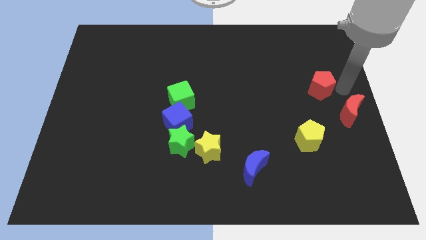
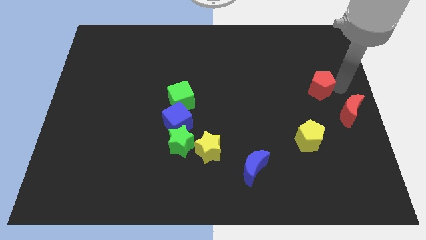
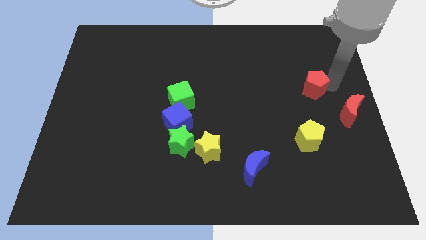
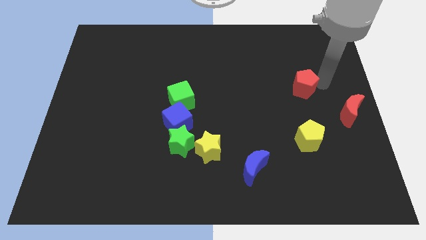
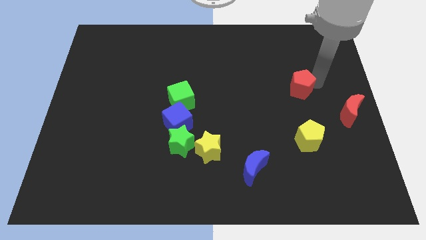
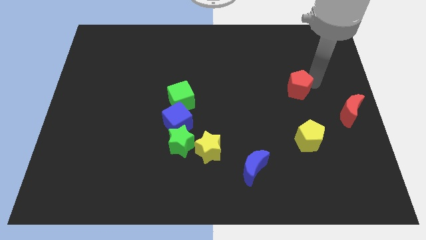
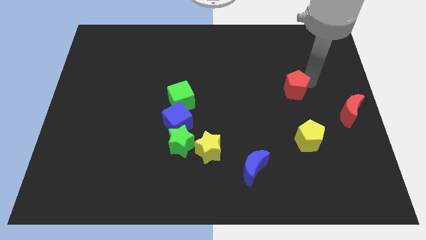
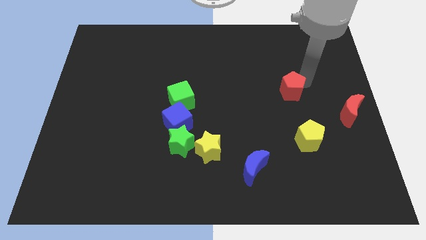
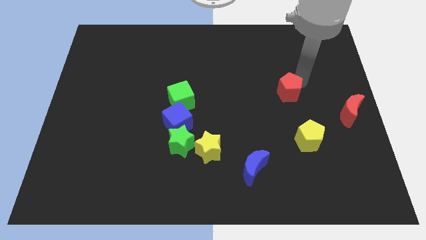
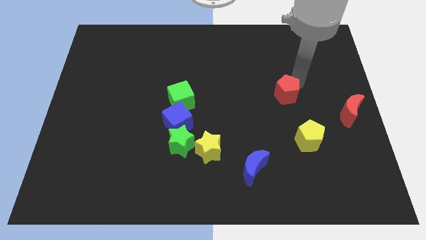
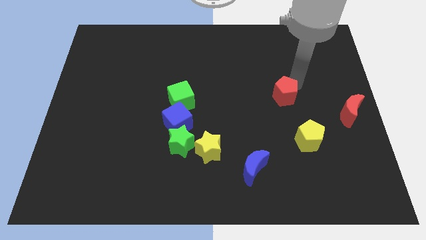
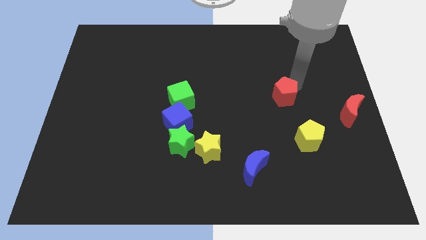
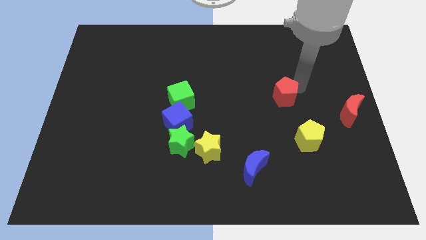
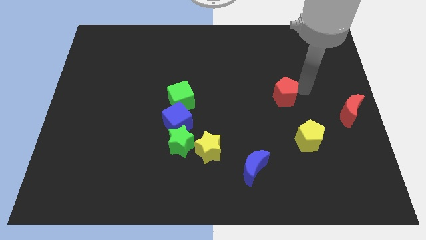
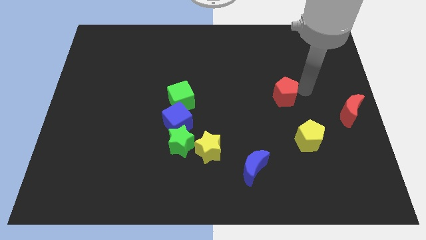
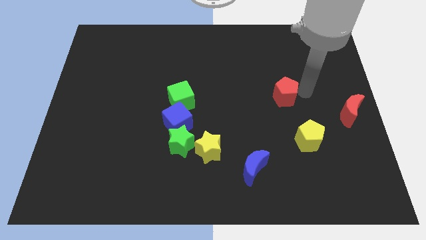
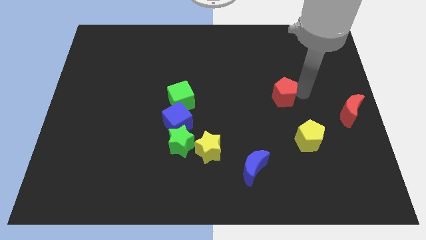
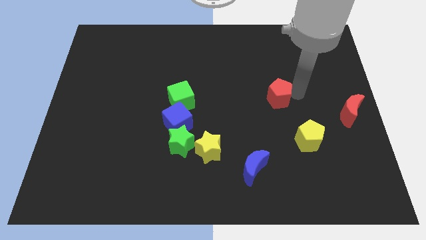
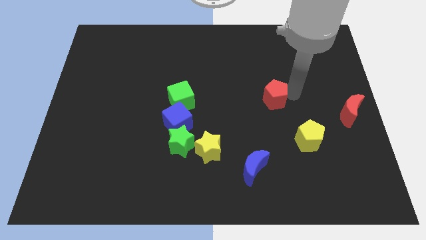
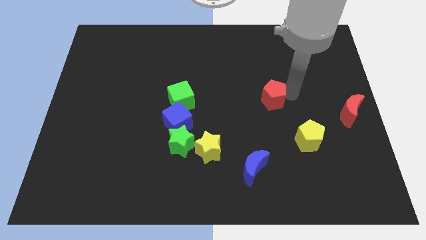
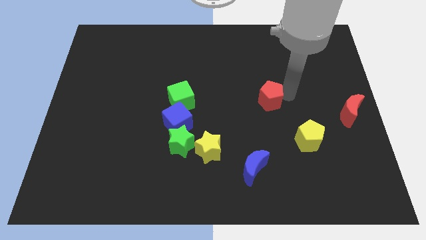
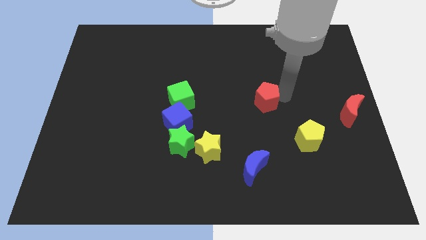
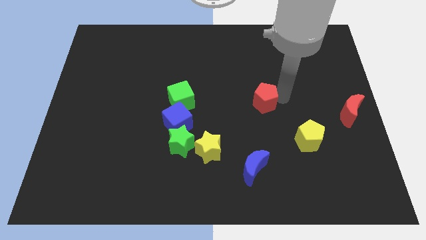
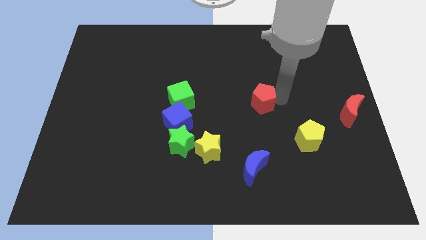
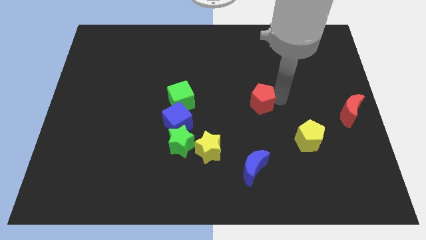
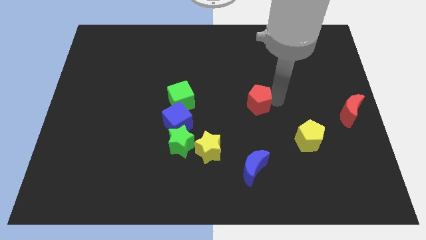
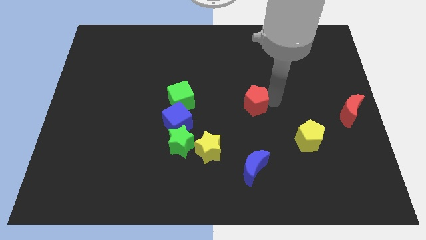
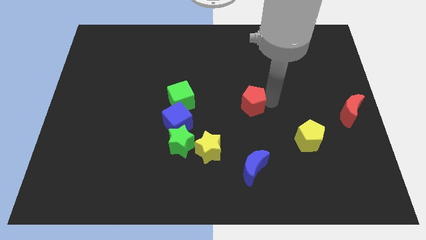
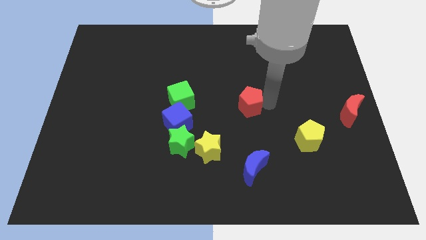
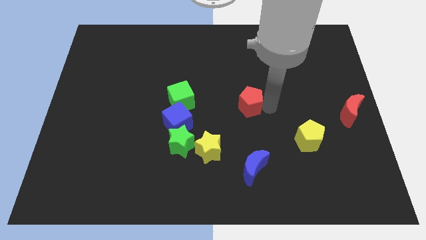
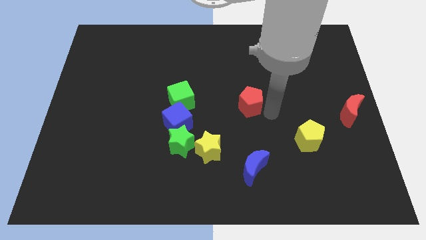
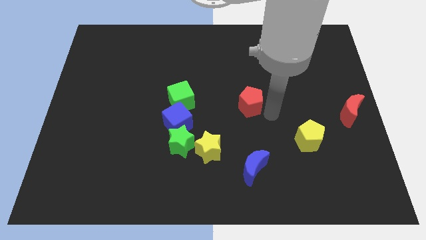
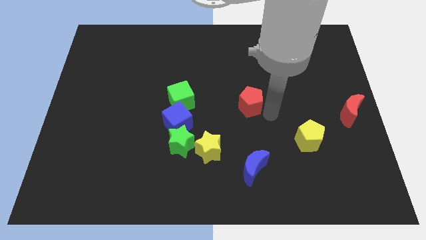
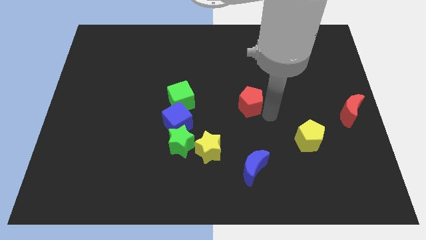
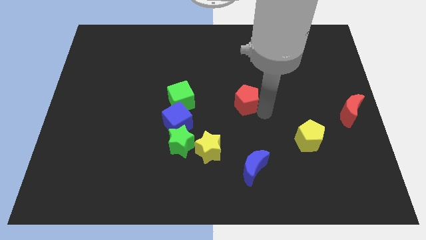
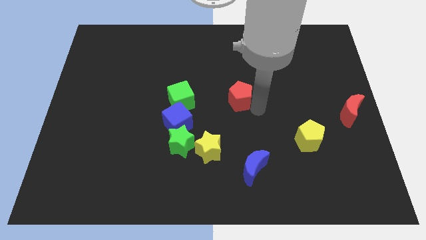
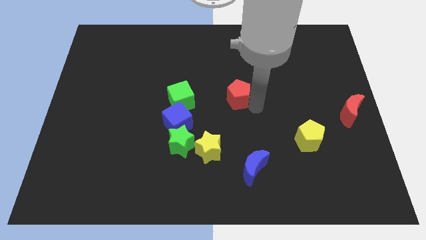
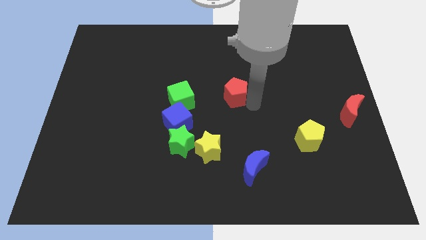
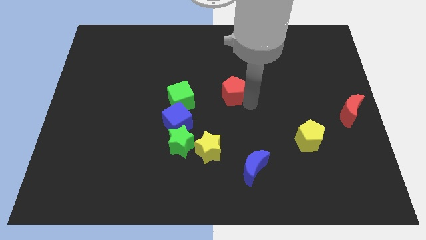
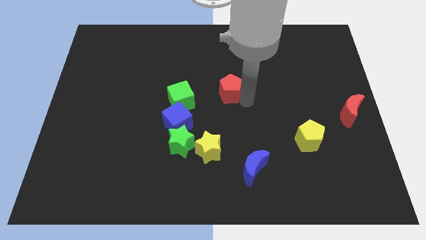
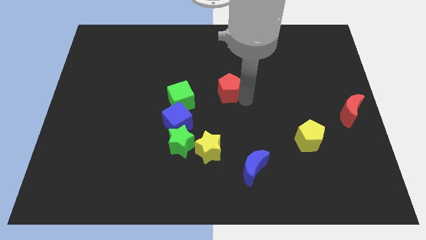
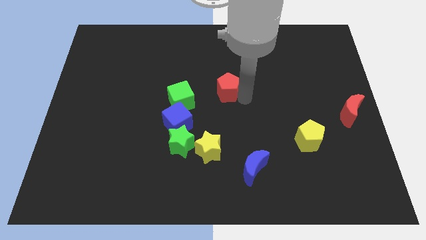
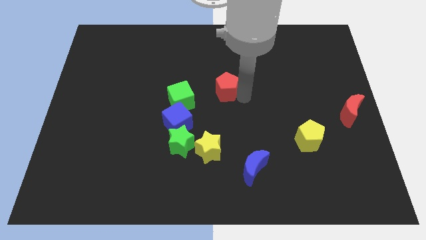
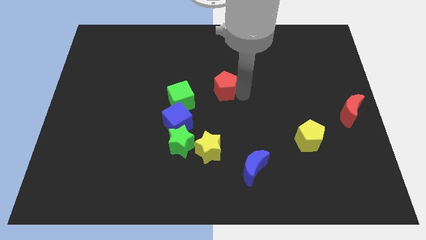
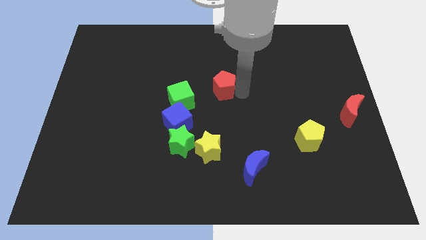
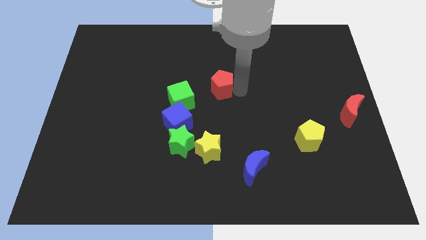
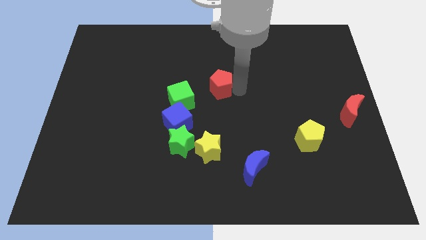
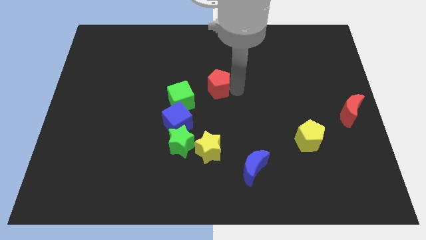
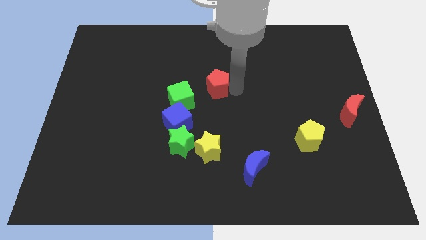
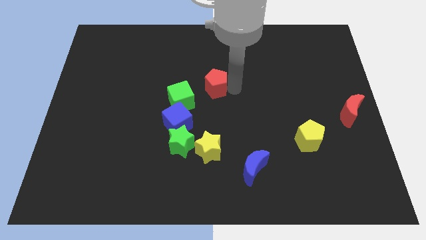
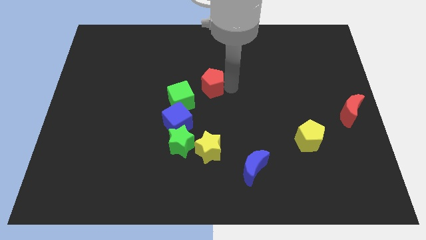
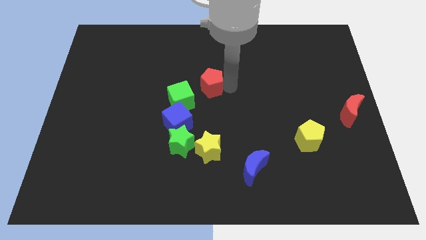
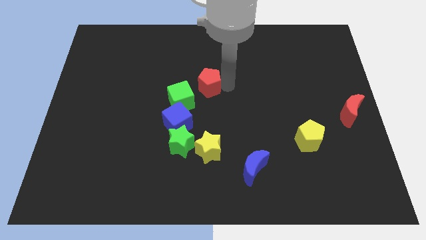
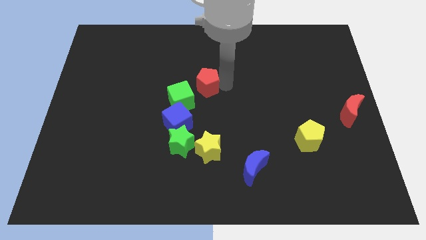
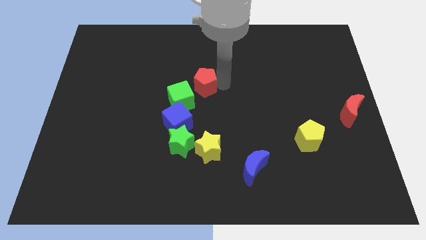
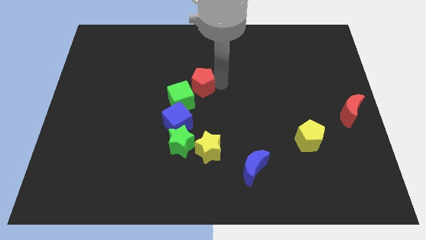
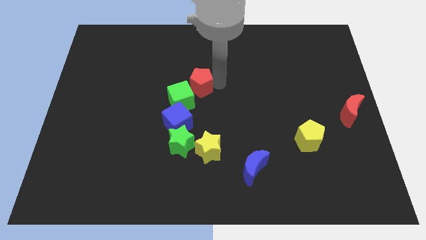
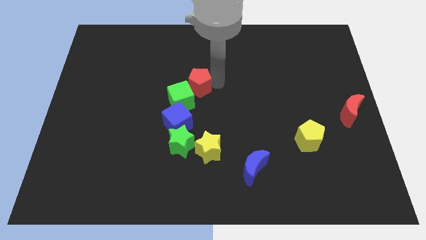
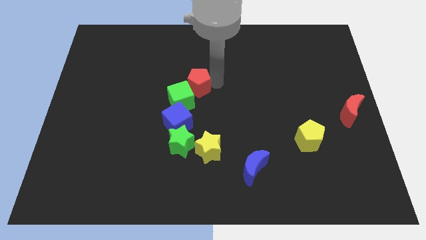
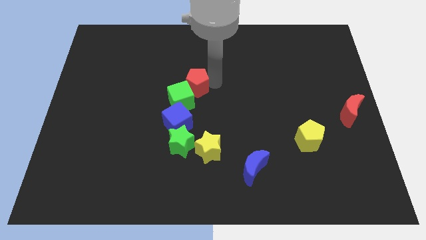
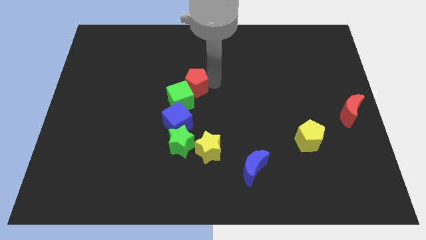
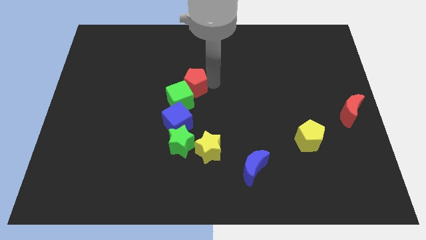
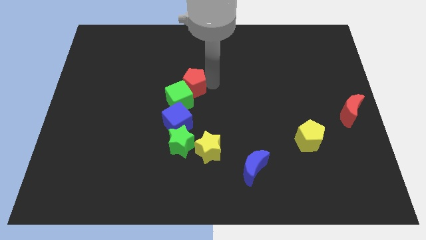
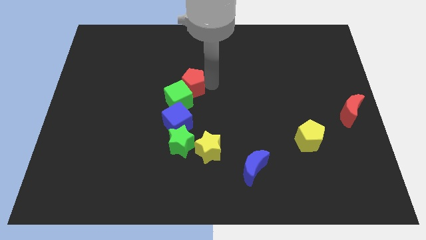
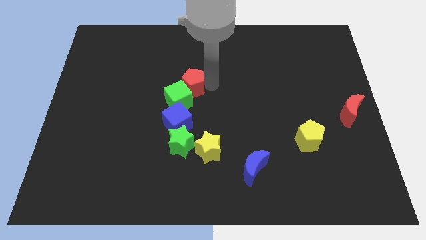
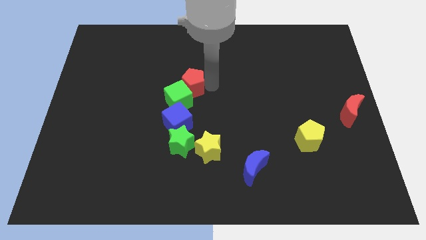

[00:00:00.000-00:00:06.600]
push the red pentagon into the top of the green cube

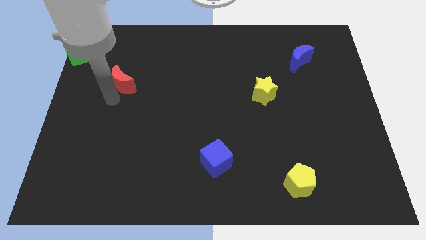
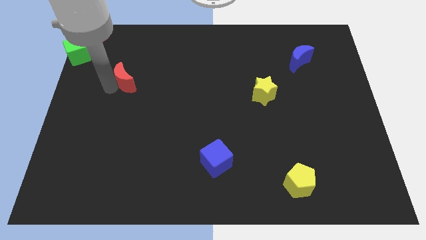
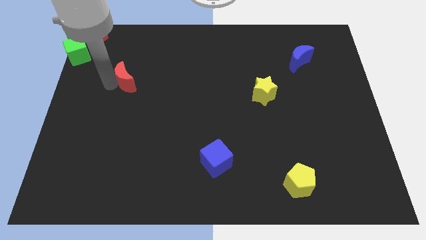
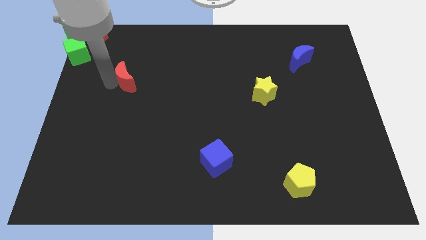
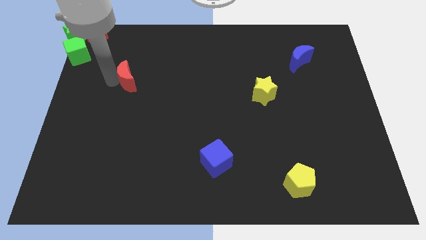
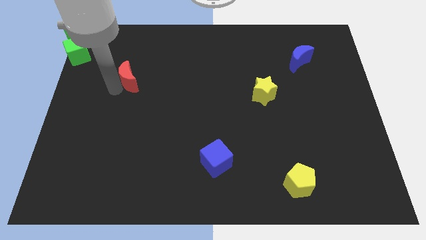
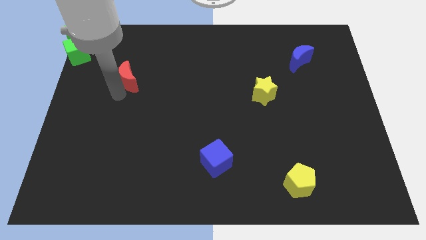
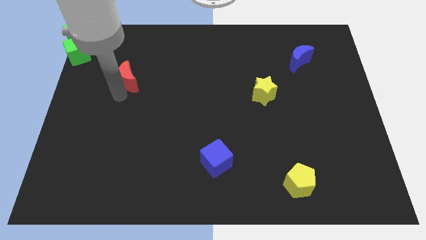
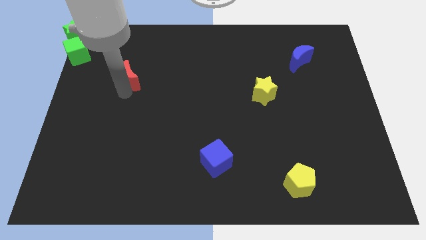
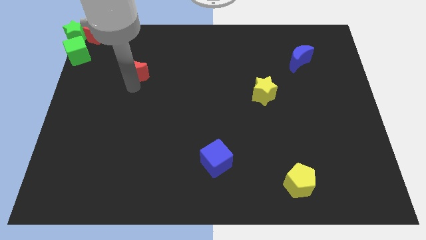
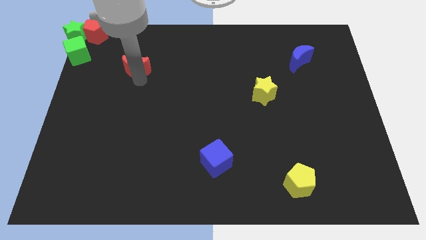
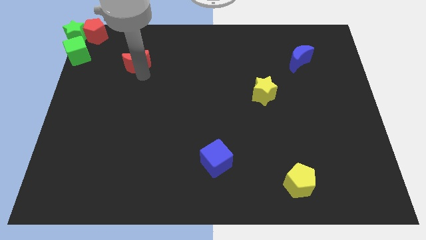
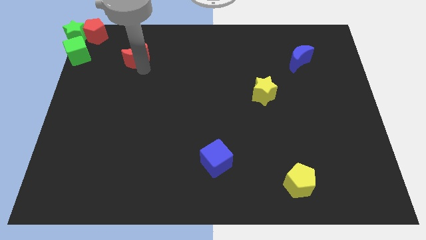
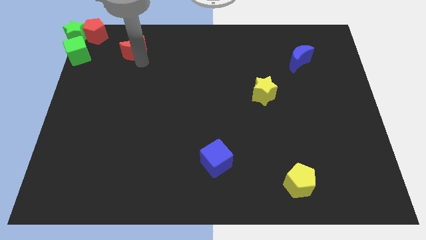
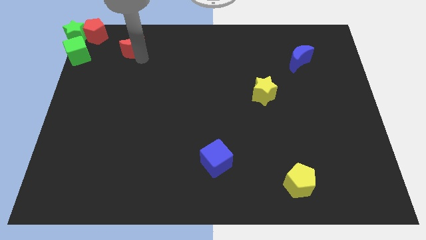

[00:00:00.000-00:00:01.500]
drag the red moon to the right of the green cube

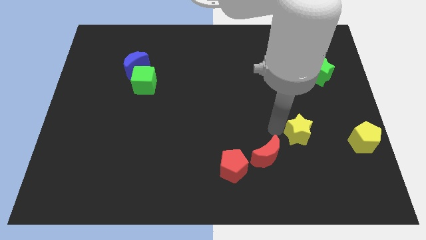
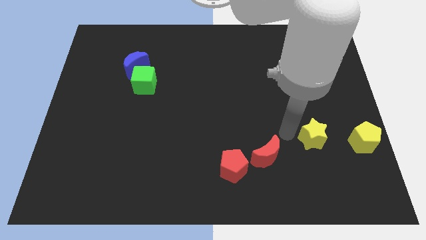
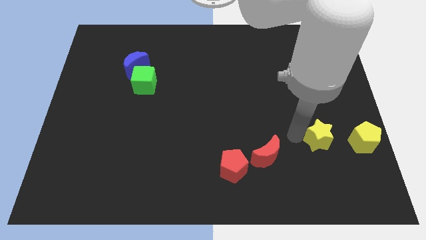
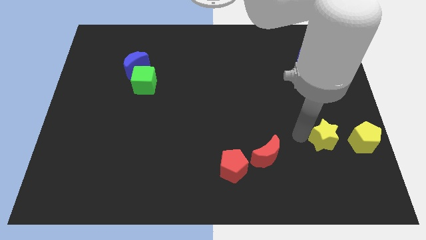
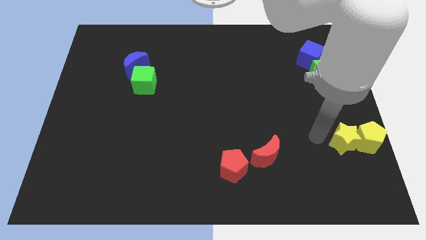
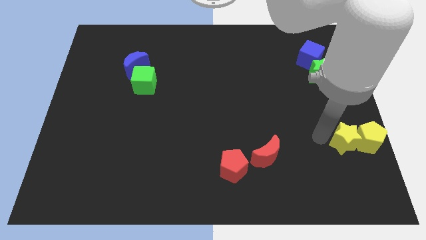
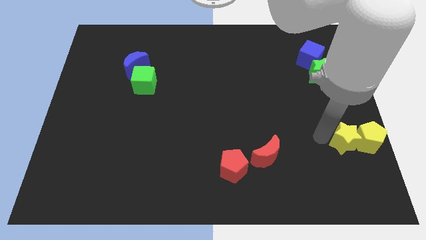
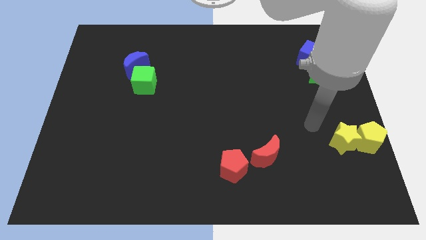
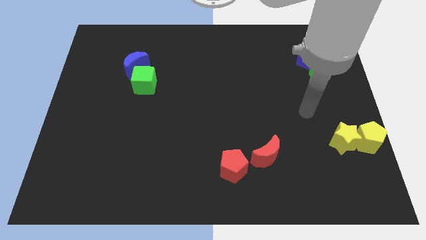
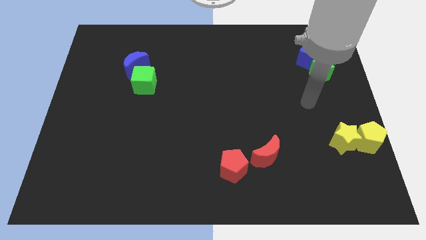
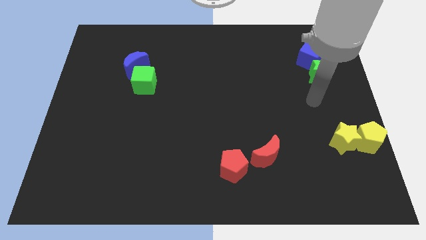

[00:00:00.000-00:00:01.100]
push yellow star in to yellow pentagon
